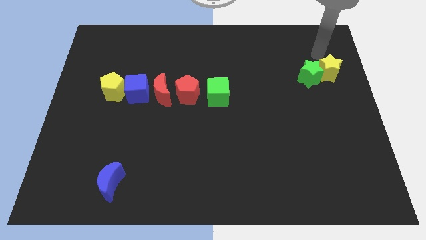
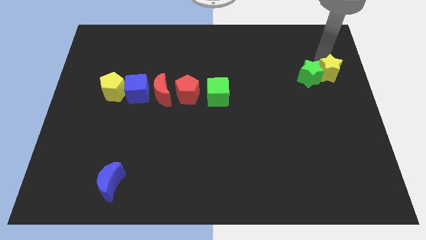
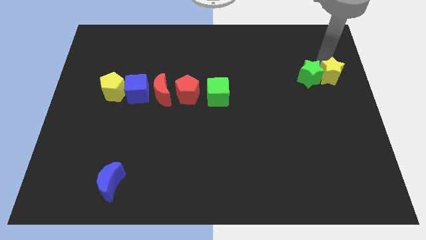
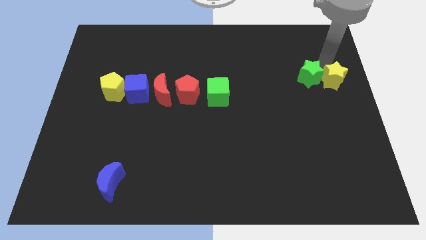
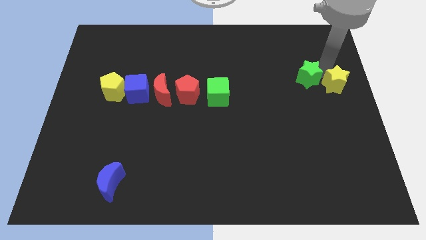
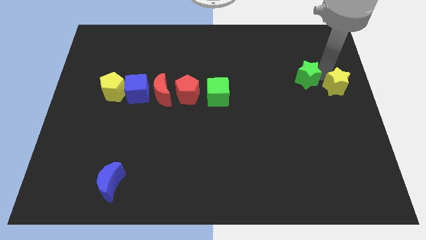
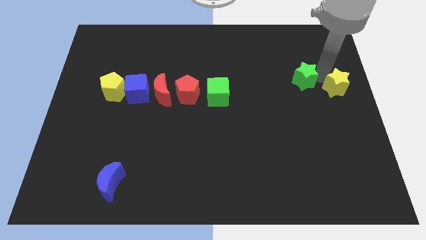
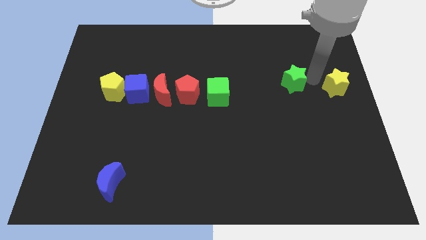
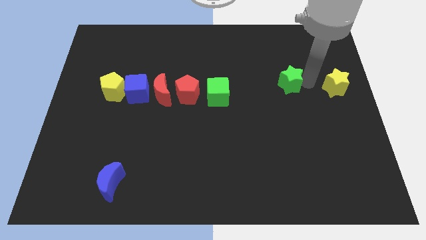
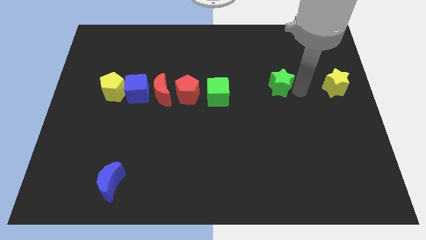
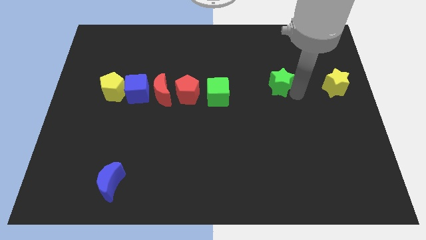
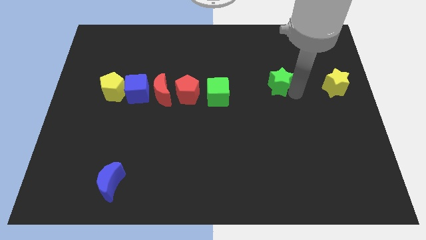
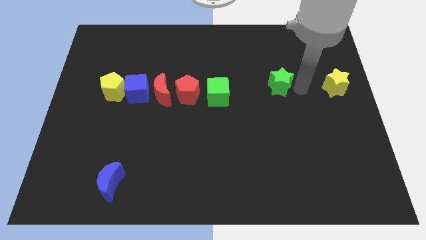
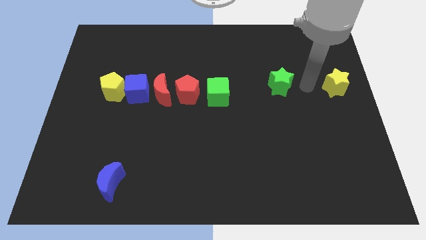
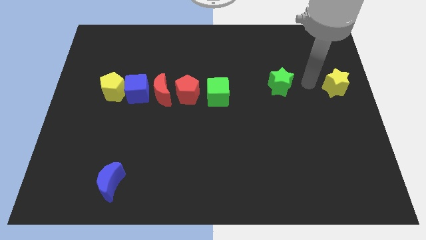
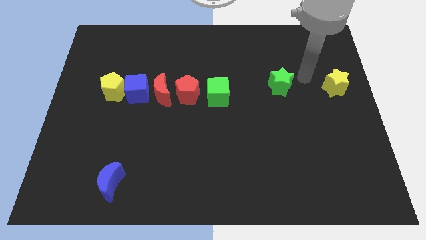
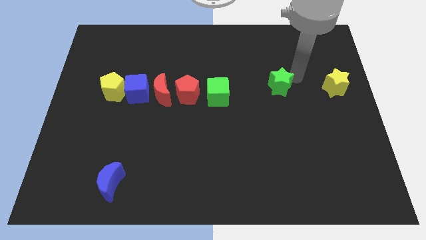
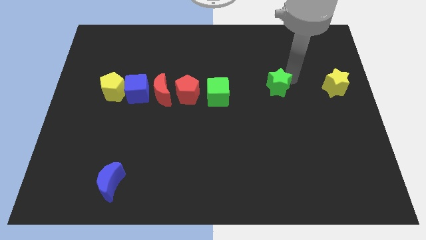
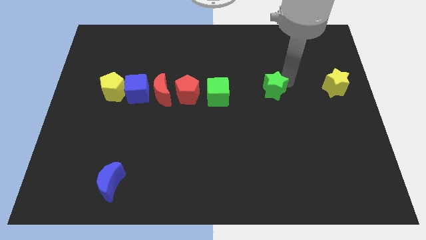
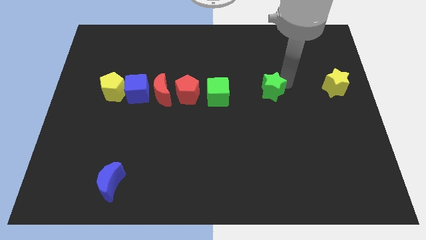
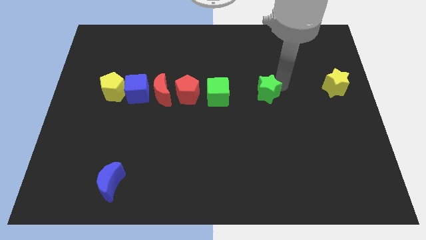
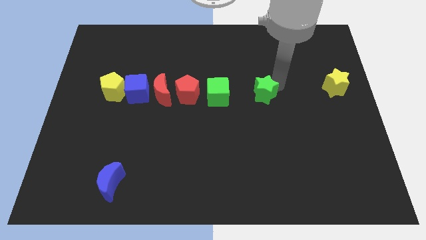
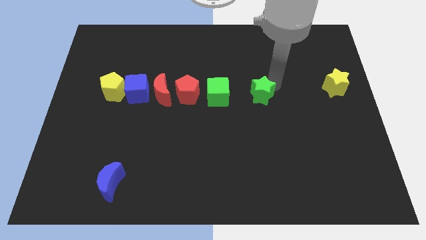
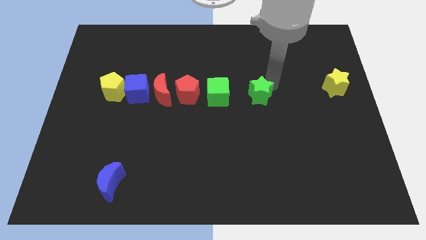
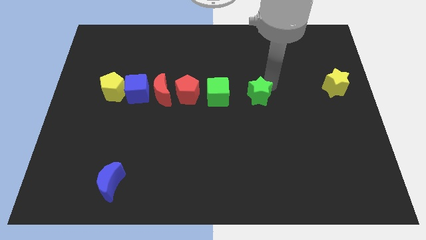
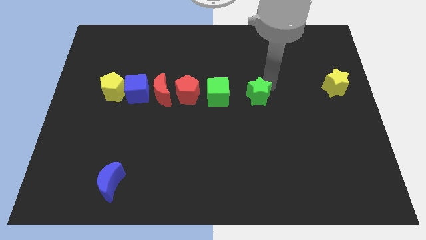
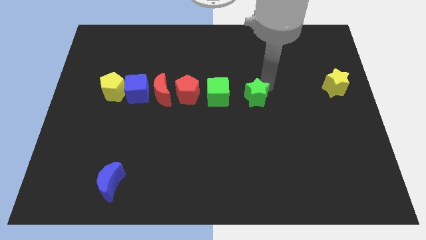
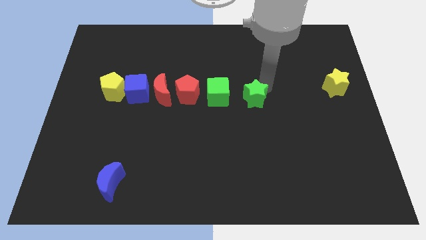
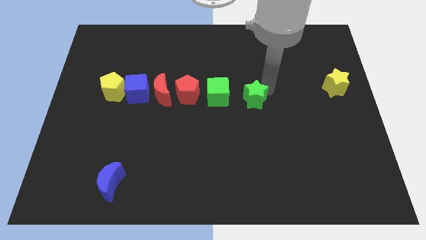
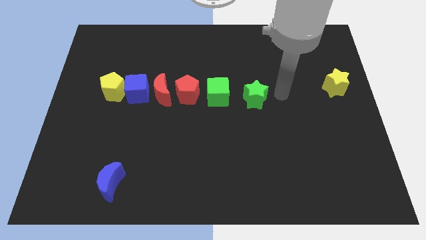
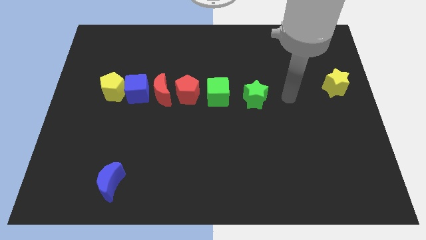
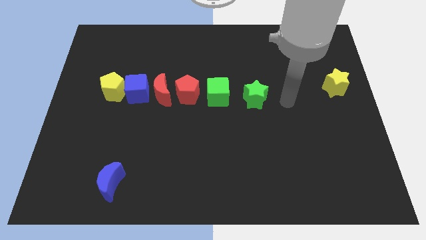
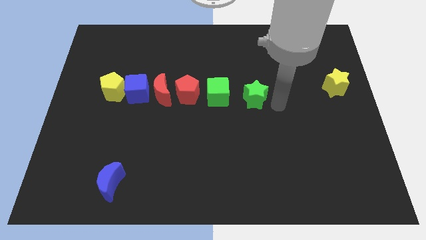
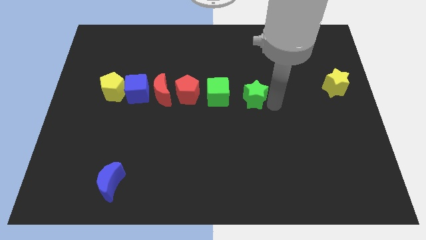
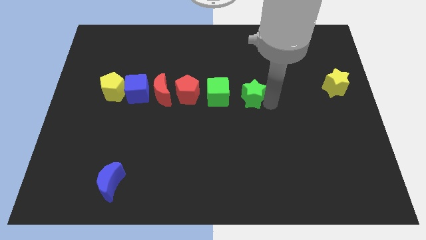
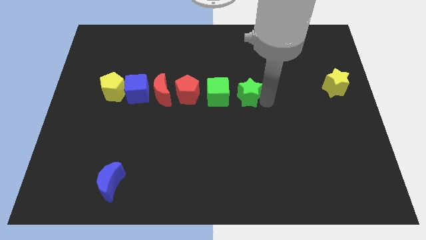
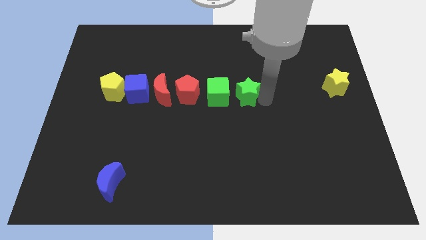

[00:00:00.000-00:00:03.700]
move green star to the right of green cube

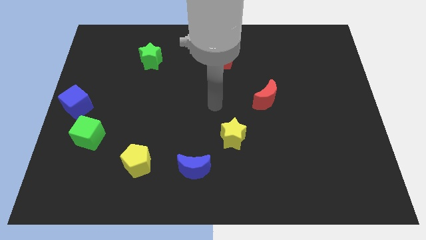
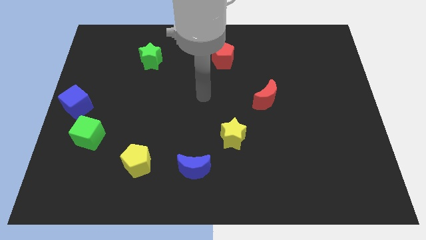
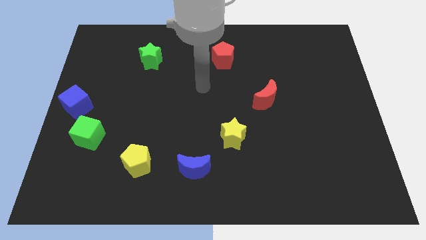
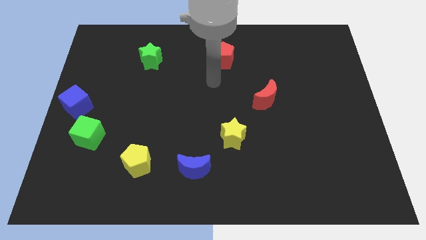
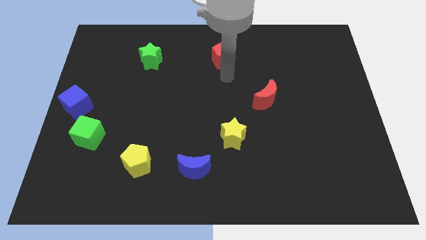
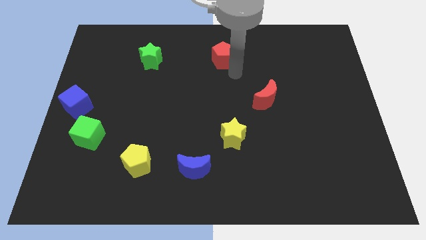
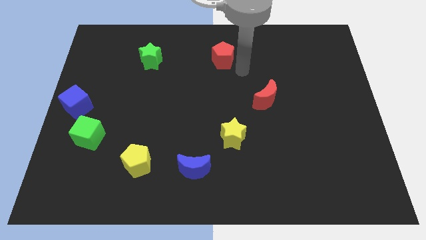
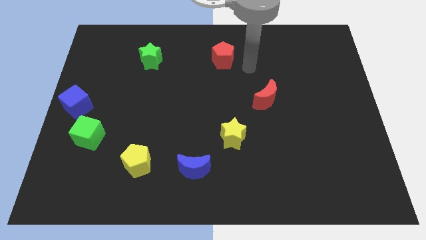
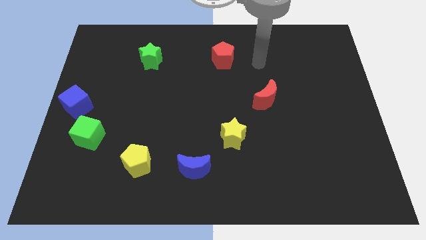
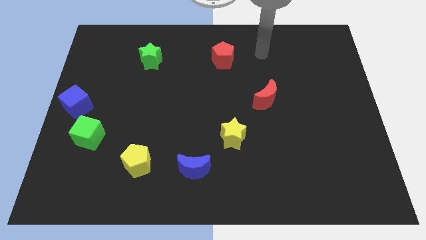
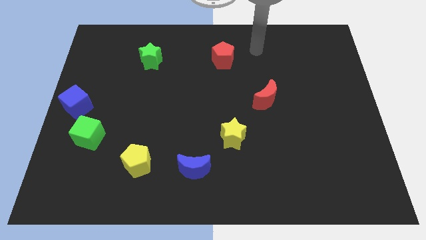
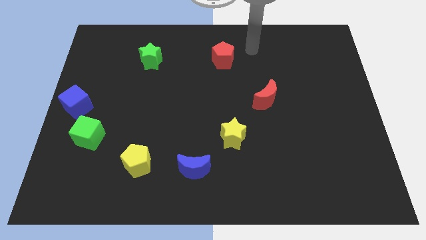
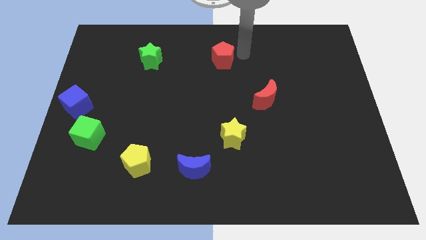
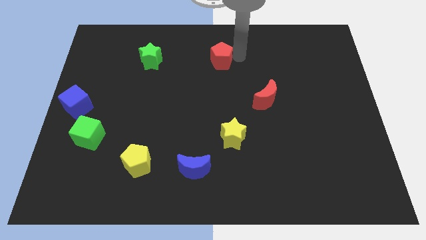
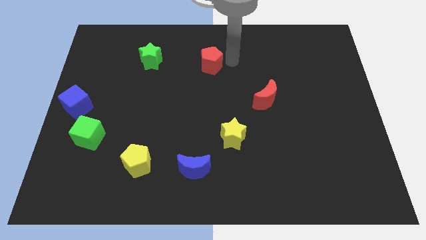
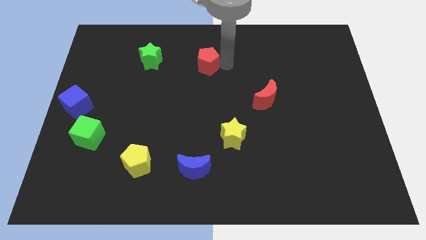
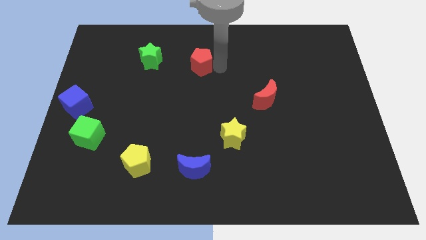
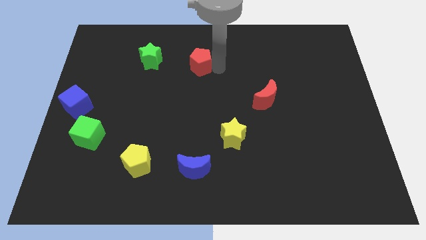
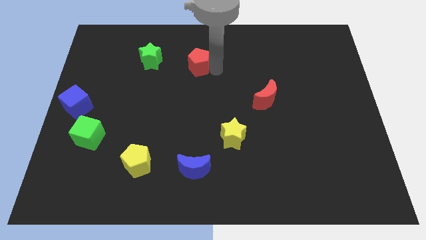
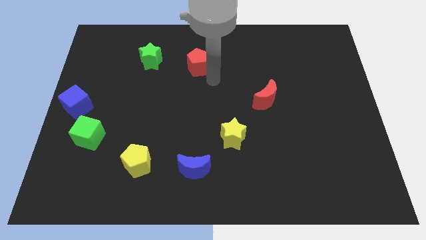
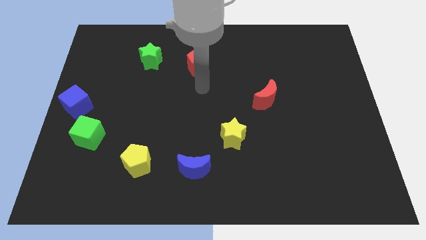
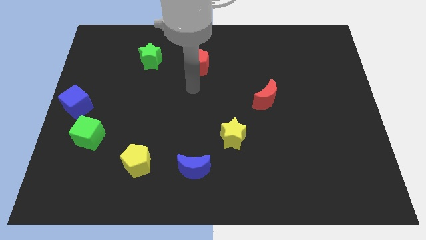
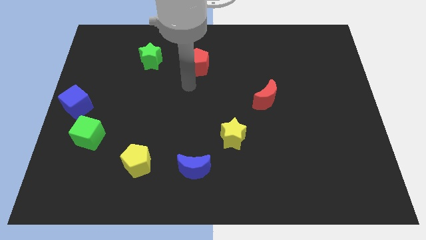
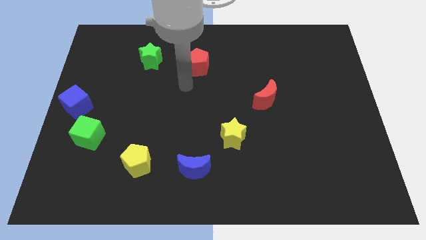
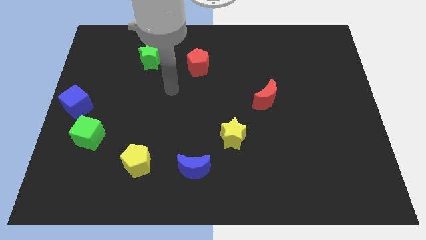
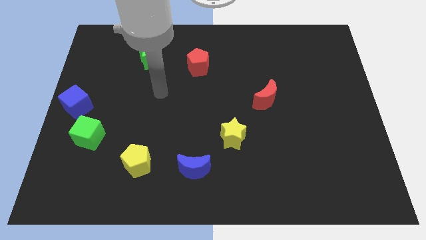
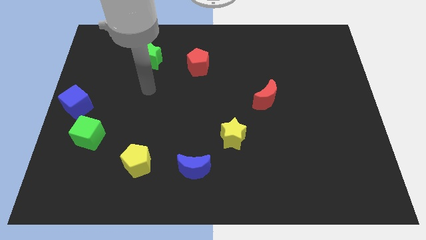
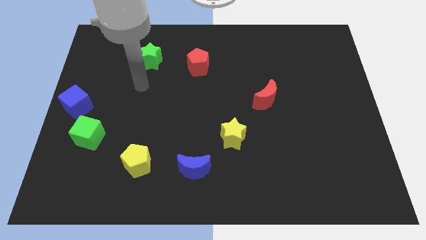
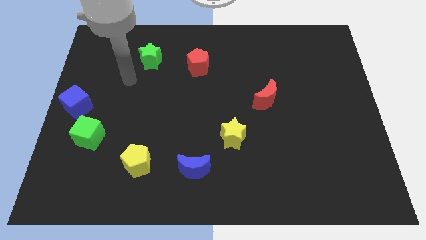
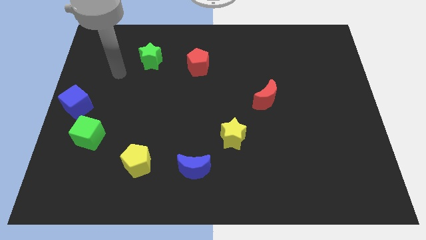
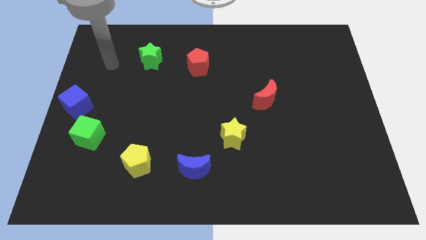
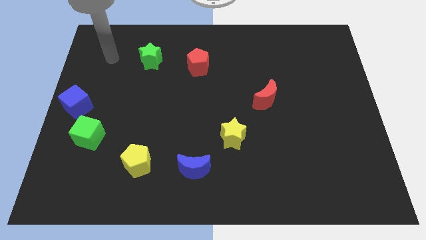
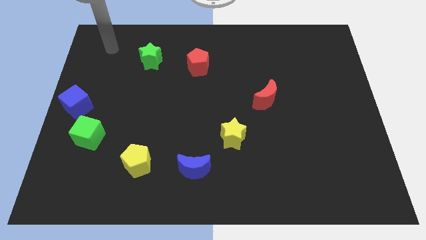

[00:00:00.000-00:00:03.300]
move the red pentagon diagonally on the top left side of the yellow star

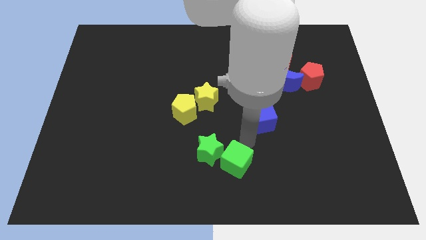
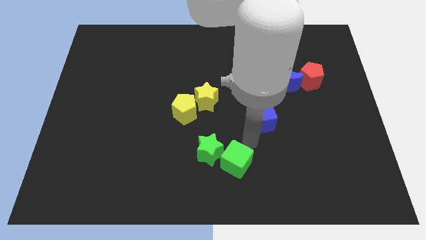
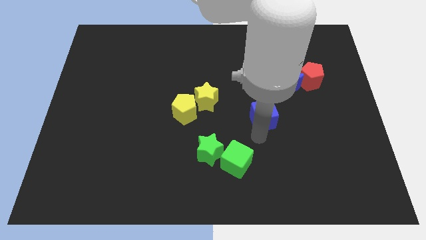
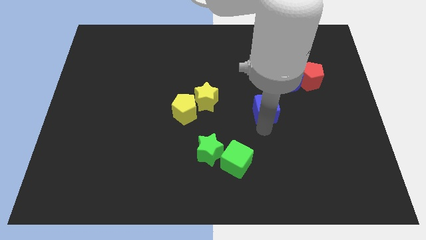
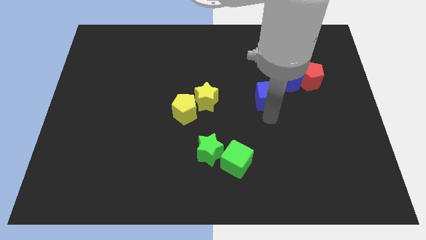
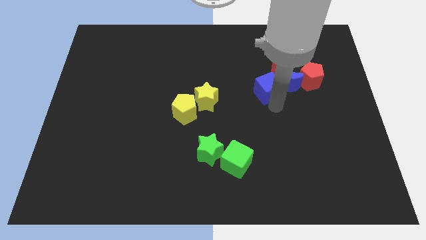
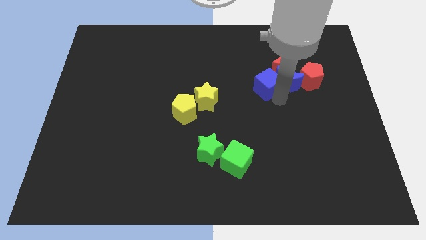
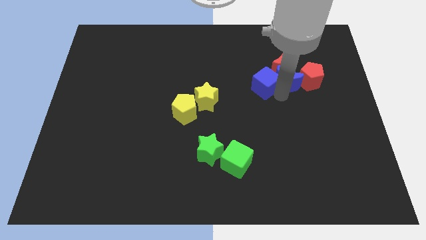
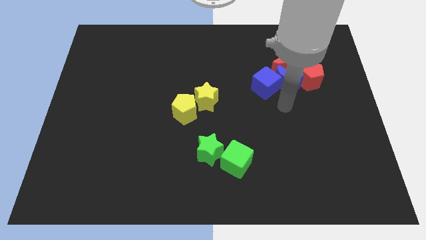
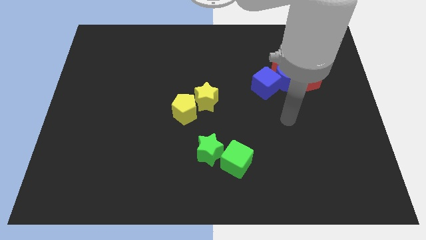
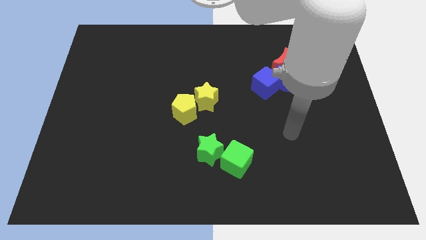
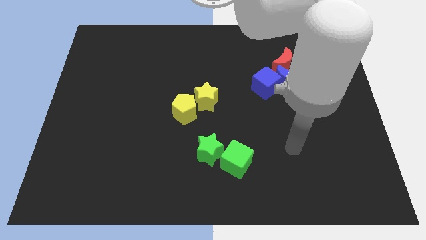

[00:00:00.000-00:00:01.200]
place blue cube to the left side of the blue moon

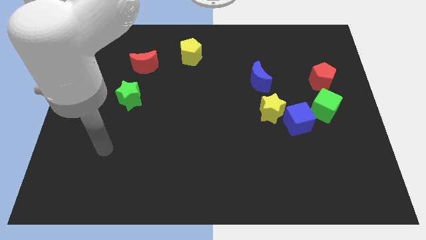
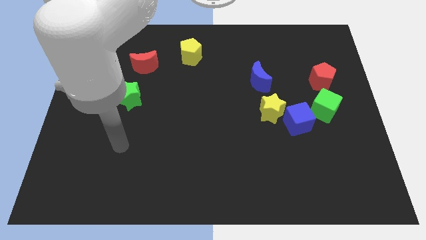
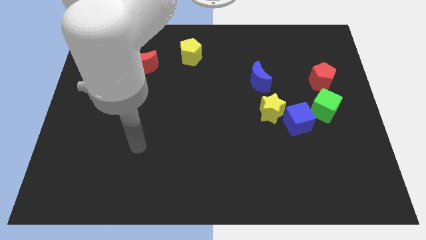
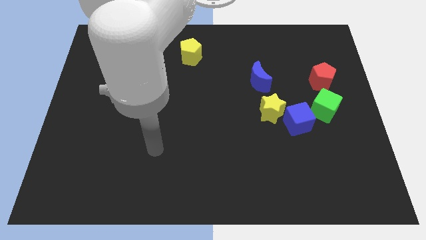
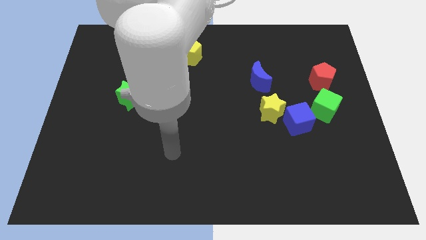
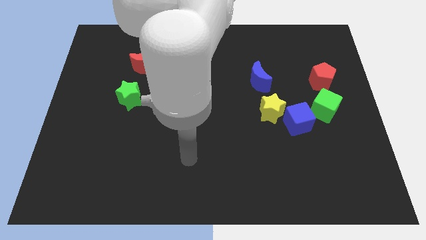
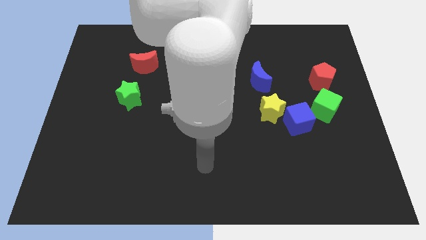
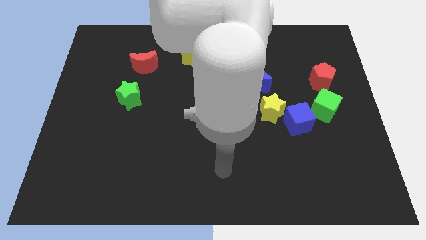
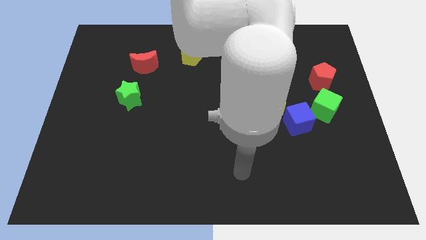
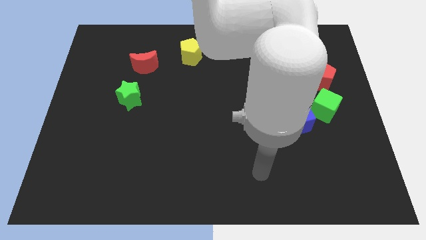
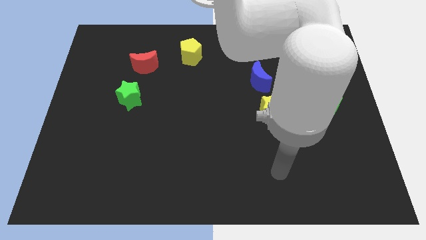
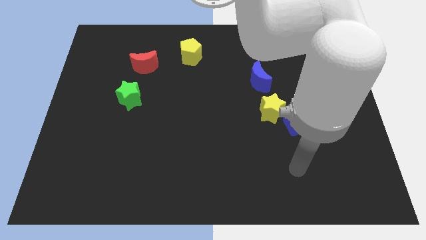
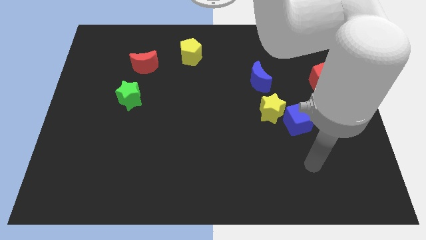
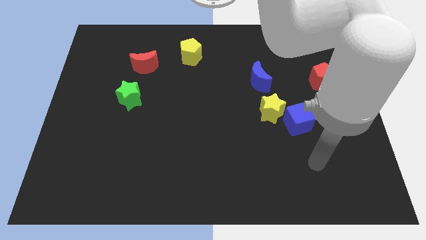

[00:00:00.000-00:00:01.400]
point your arm to the bottom side of the blue cube
